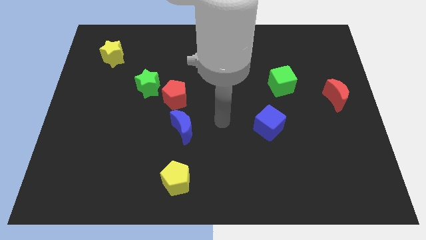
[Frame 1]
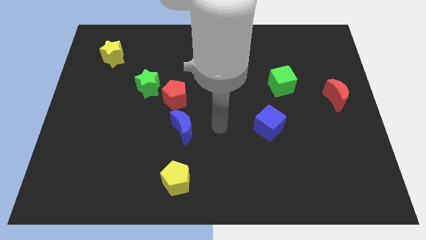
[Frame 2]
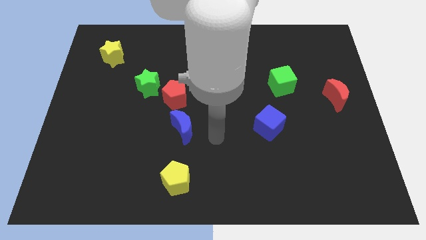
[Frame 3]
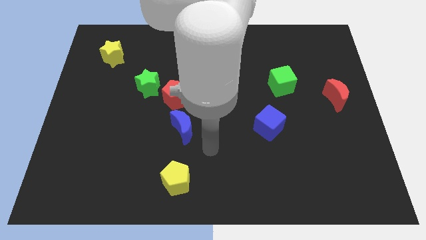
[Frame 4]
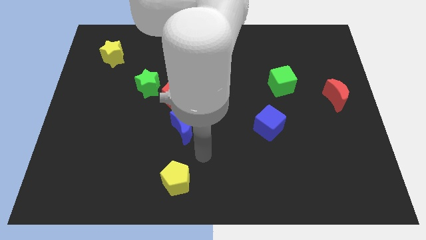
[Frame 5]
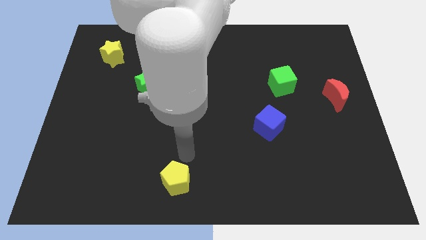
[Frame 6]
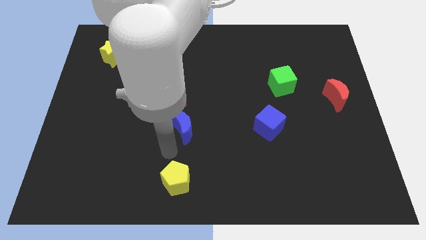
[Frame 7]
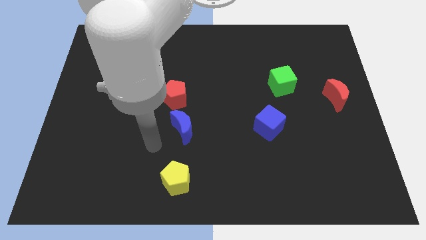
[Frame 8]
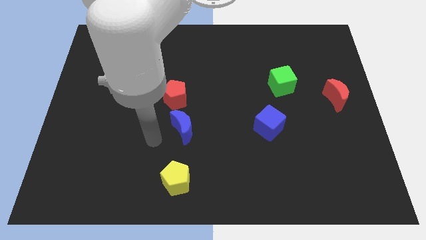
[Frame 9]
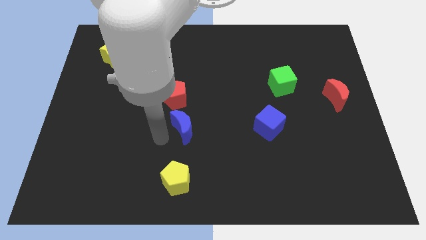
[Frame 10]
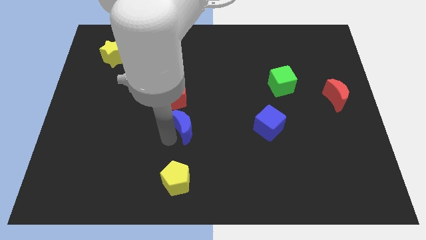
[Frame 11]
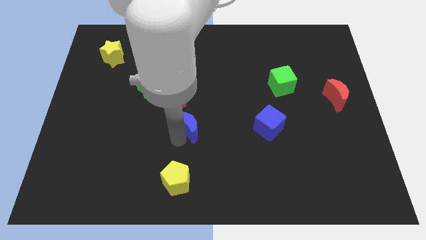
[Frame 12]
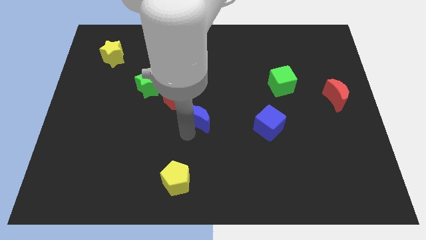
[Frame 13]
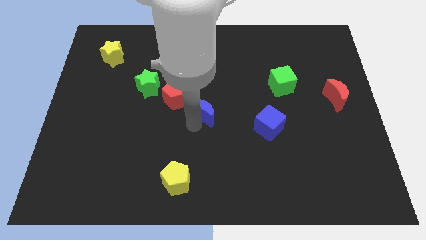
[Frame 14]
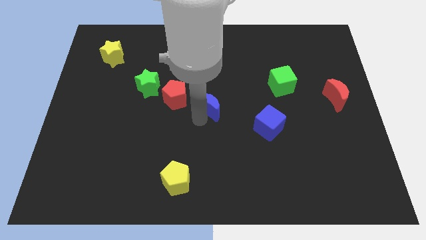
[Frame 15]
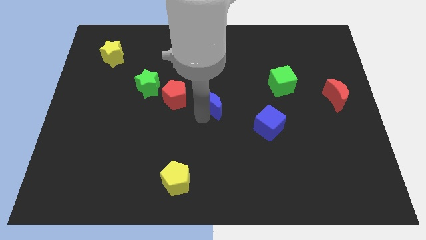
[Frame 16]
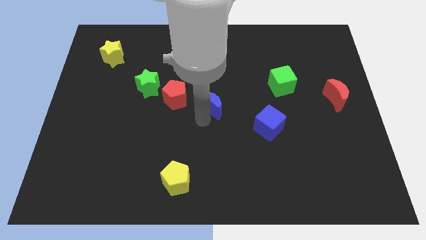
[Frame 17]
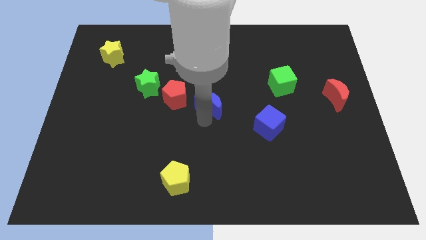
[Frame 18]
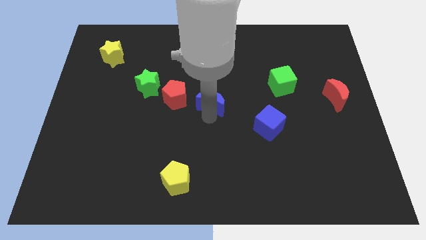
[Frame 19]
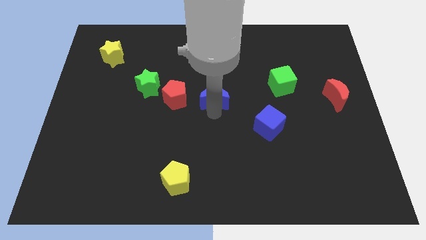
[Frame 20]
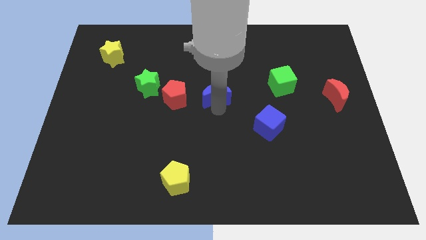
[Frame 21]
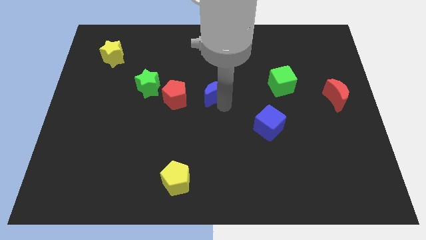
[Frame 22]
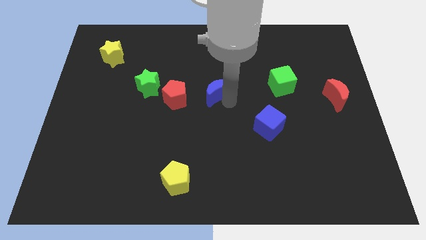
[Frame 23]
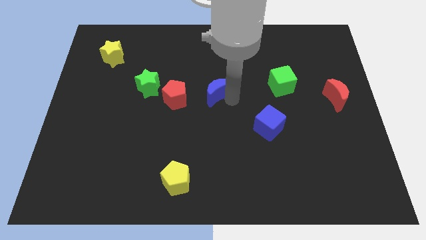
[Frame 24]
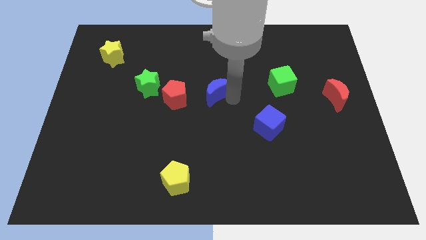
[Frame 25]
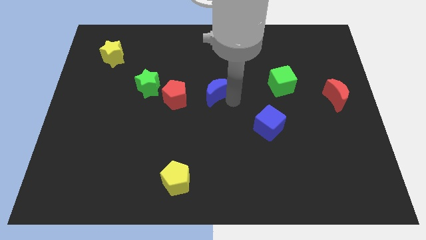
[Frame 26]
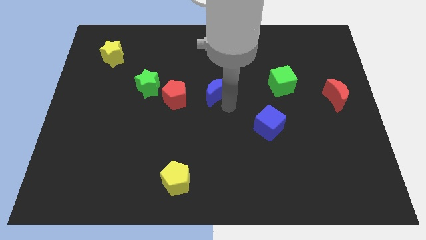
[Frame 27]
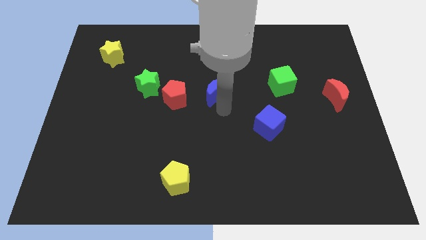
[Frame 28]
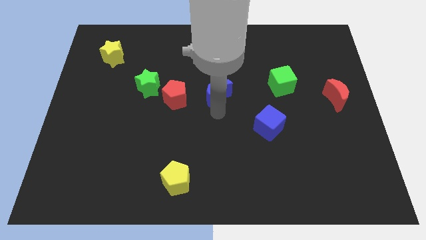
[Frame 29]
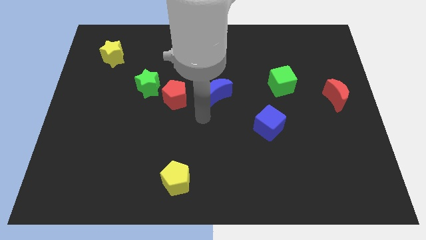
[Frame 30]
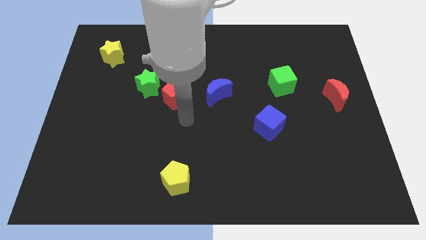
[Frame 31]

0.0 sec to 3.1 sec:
slide blue moon to right of red pentagon

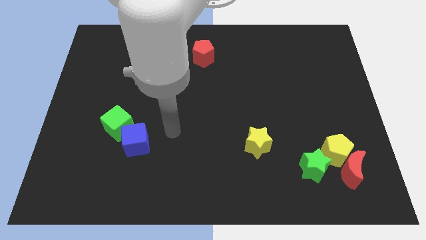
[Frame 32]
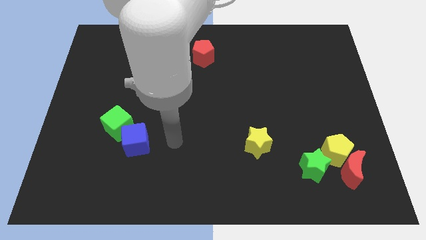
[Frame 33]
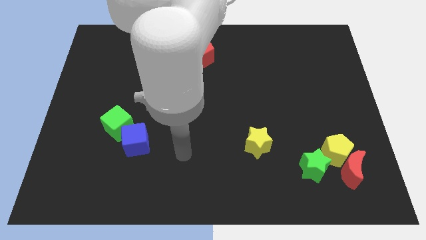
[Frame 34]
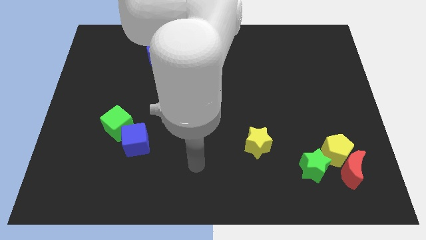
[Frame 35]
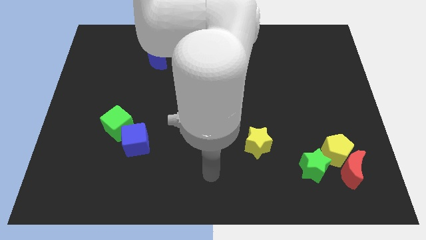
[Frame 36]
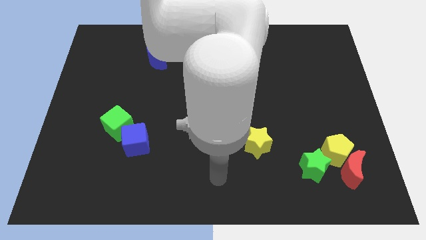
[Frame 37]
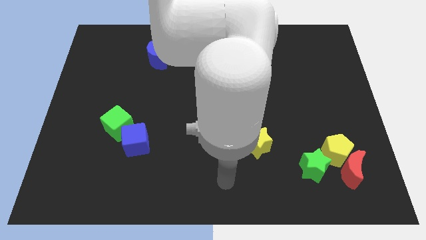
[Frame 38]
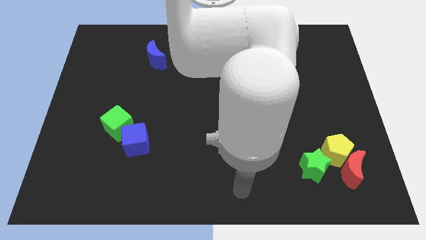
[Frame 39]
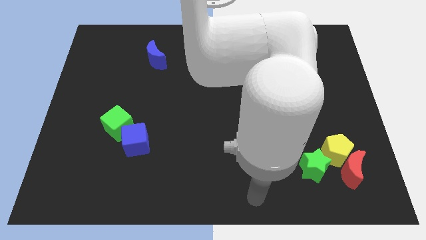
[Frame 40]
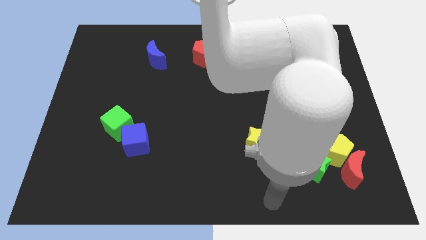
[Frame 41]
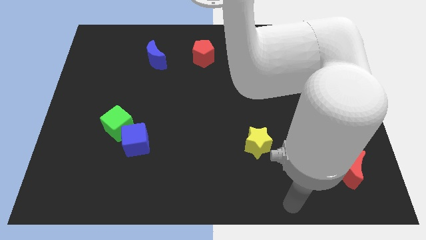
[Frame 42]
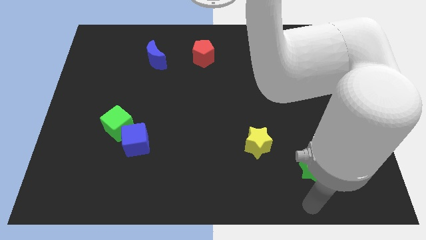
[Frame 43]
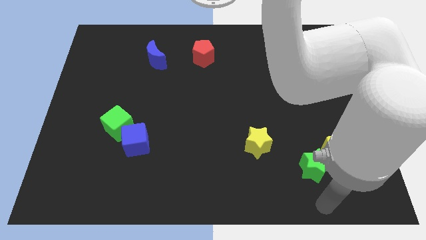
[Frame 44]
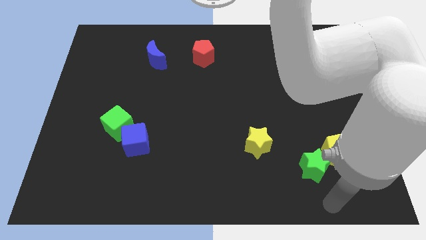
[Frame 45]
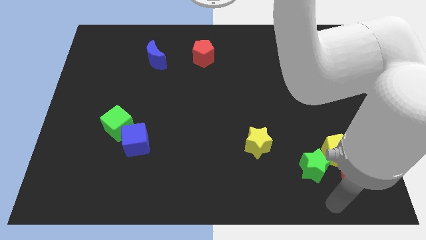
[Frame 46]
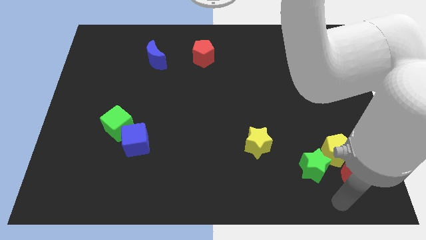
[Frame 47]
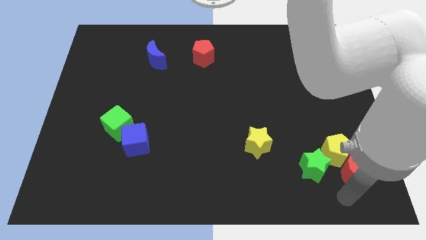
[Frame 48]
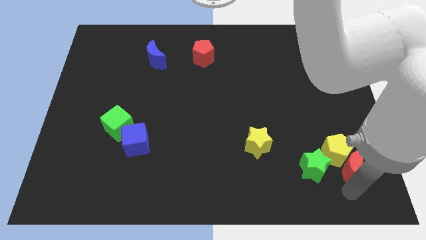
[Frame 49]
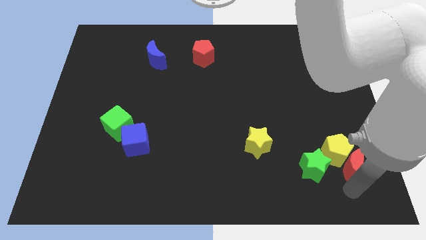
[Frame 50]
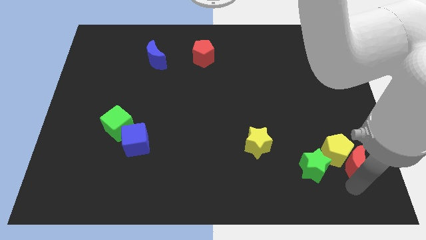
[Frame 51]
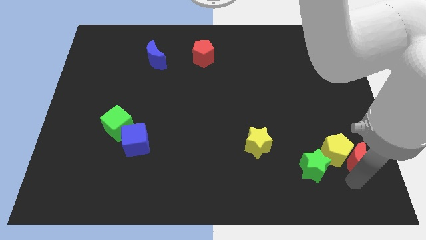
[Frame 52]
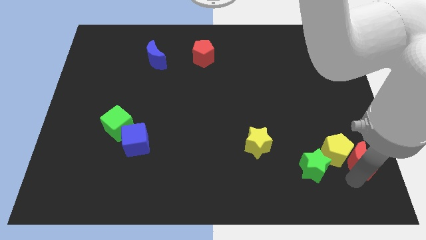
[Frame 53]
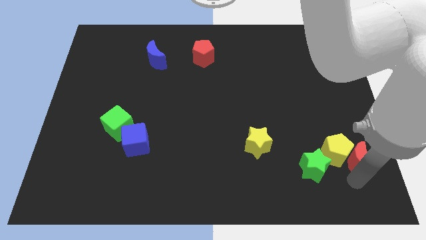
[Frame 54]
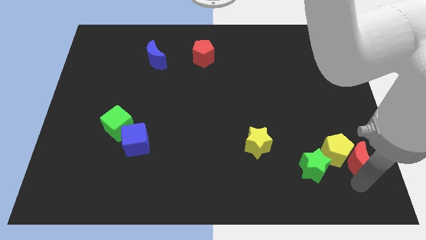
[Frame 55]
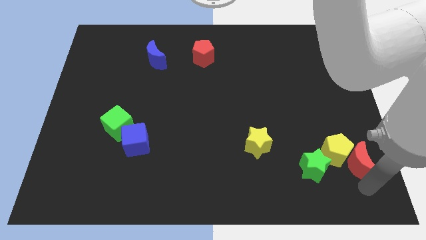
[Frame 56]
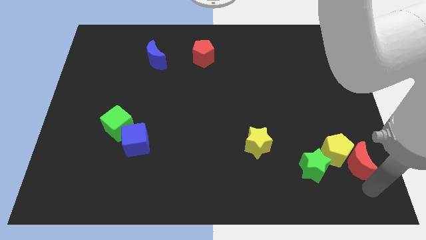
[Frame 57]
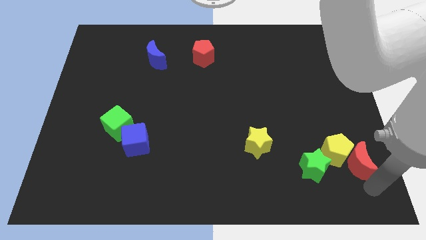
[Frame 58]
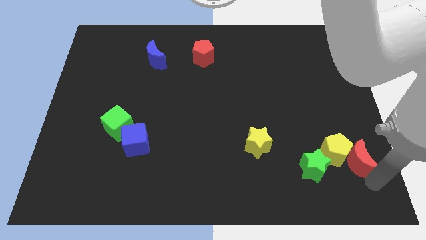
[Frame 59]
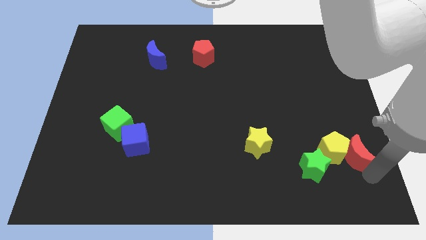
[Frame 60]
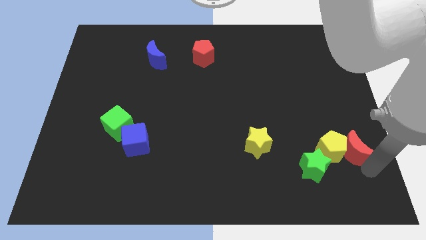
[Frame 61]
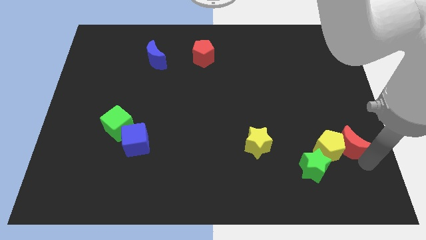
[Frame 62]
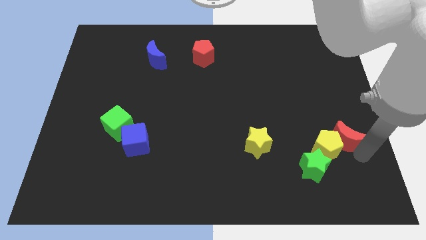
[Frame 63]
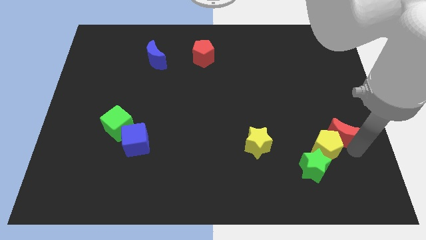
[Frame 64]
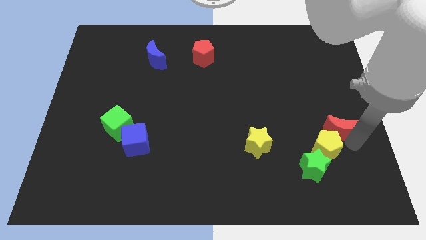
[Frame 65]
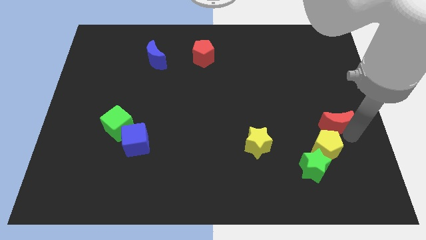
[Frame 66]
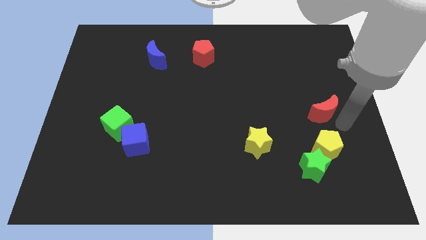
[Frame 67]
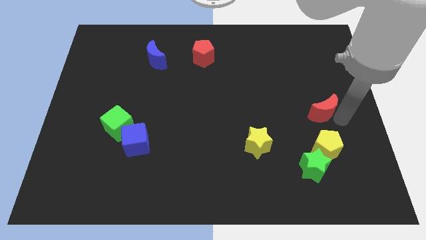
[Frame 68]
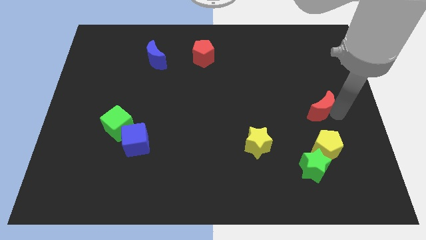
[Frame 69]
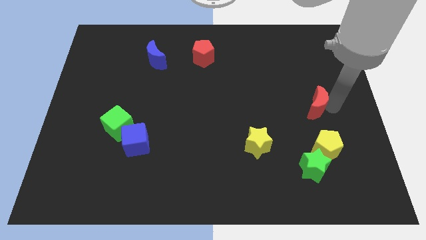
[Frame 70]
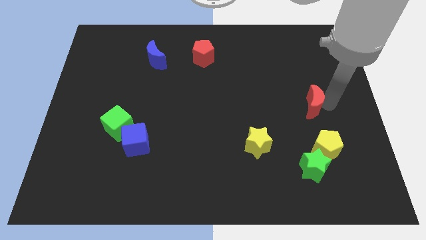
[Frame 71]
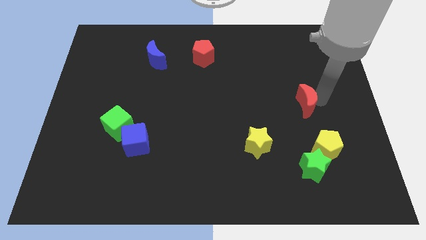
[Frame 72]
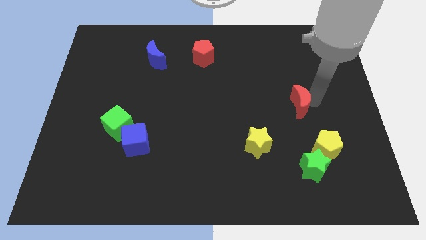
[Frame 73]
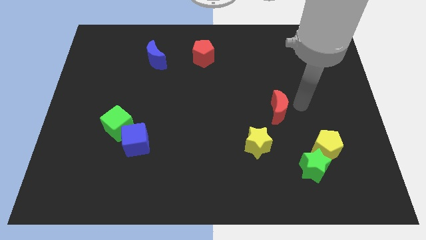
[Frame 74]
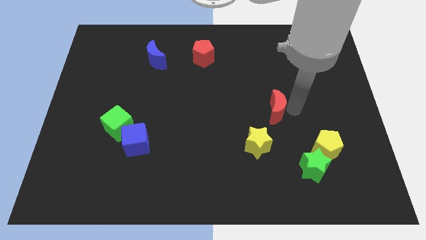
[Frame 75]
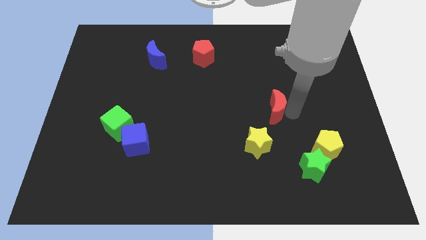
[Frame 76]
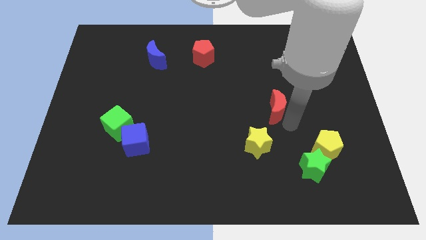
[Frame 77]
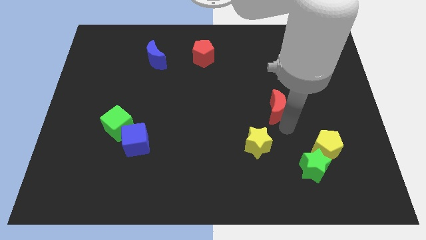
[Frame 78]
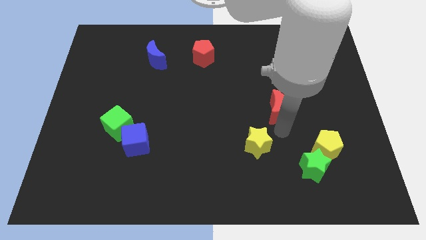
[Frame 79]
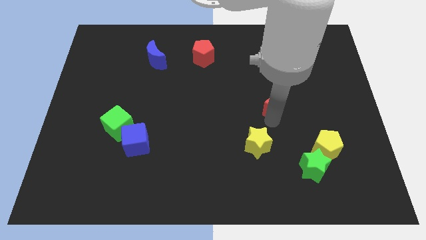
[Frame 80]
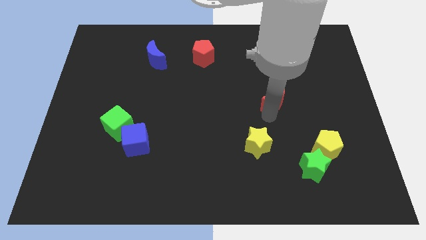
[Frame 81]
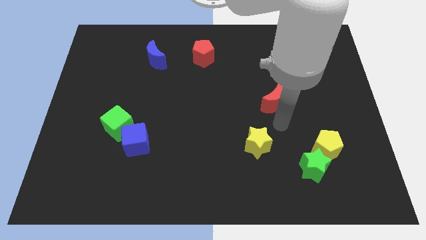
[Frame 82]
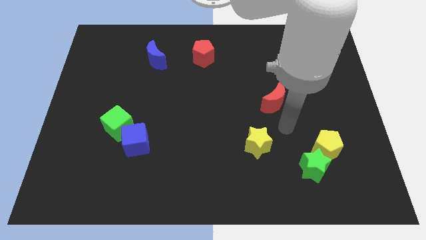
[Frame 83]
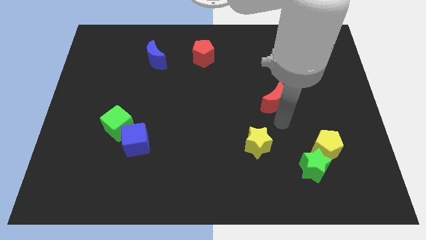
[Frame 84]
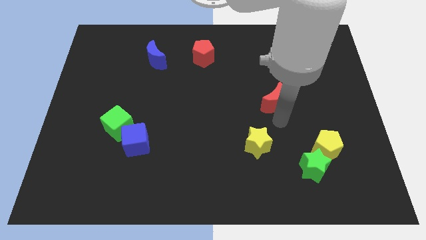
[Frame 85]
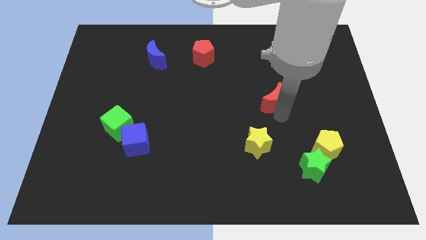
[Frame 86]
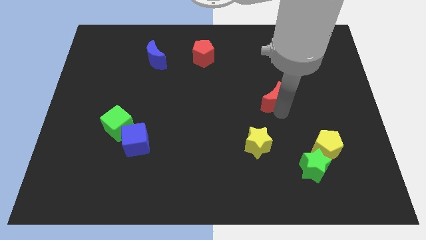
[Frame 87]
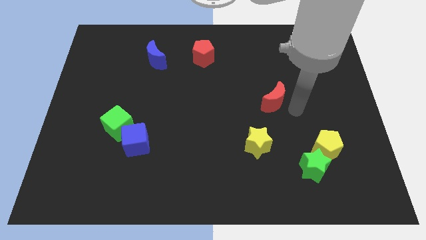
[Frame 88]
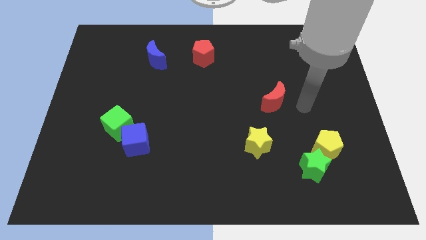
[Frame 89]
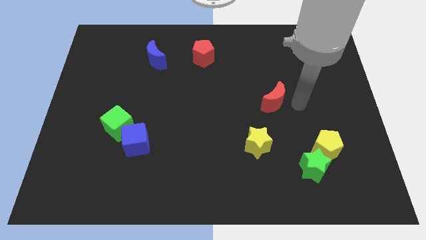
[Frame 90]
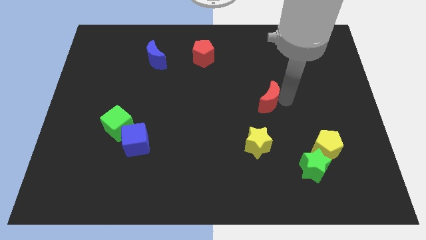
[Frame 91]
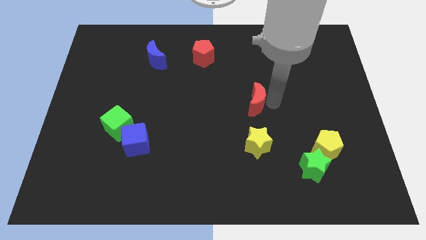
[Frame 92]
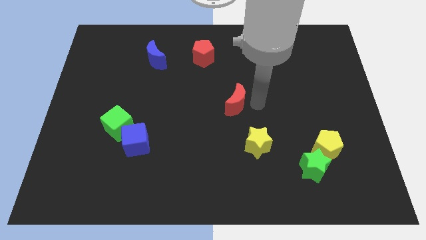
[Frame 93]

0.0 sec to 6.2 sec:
move the red crescent above the yellow star
